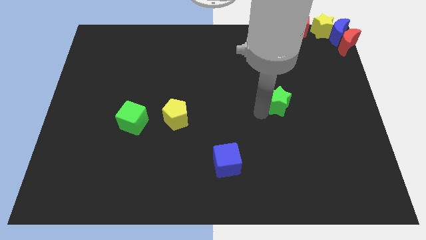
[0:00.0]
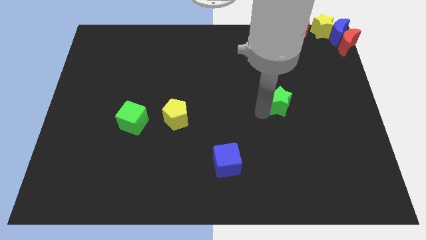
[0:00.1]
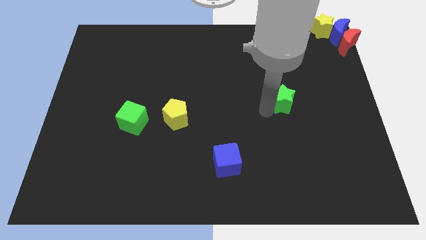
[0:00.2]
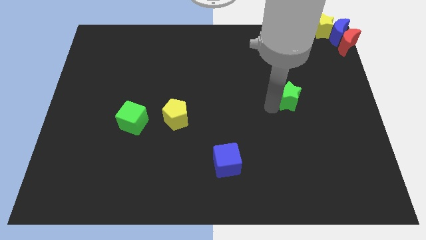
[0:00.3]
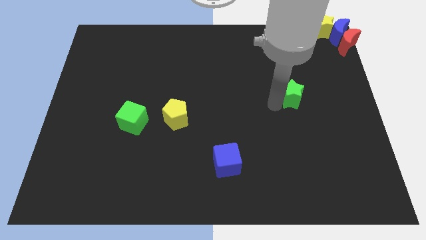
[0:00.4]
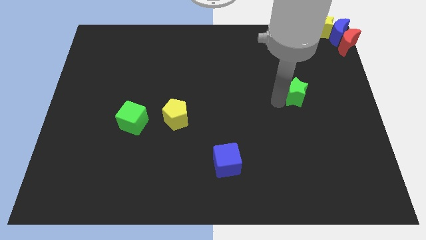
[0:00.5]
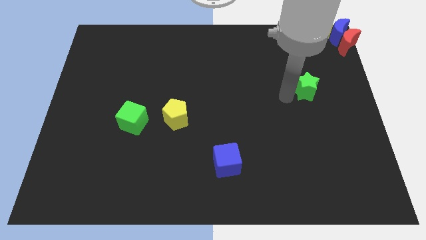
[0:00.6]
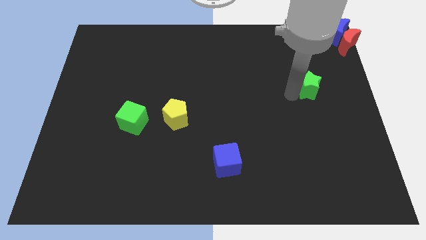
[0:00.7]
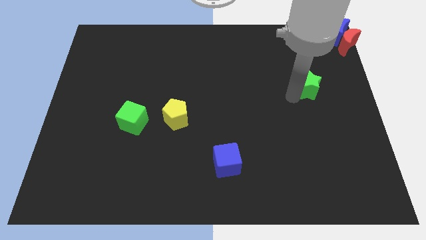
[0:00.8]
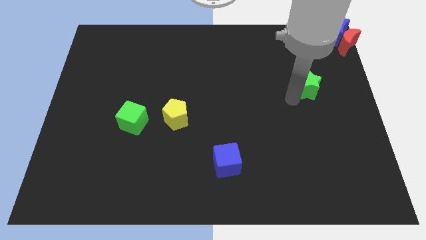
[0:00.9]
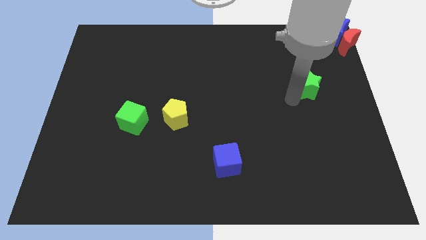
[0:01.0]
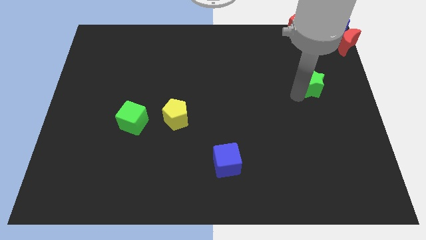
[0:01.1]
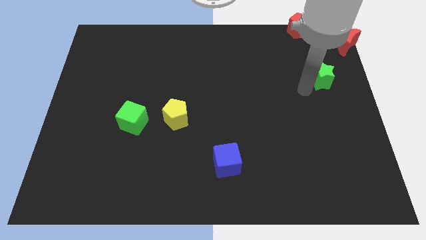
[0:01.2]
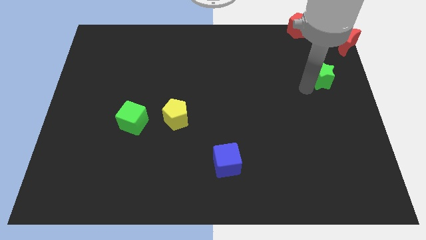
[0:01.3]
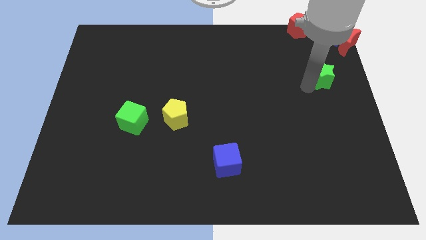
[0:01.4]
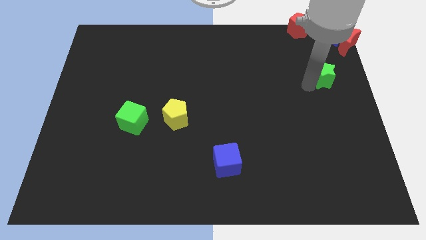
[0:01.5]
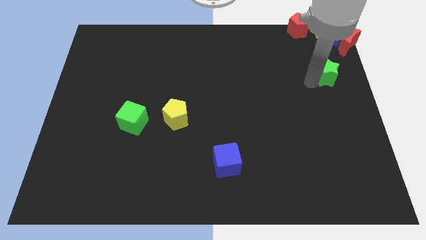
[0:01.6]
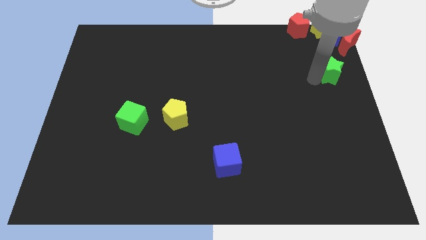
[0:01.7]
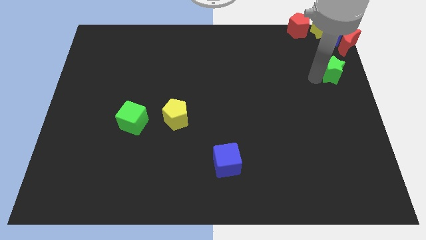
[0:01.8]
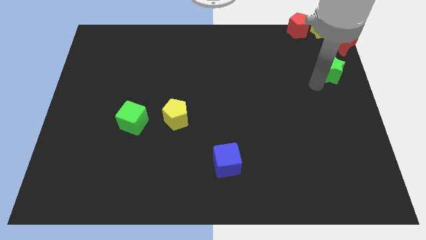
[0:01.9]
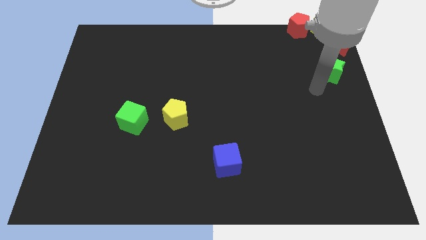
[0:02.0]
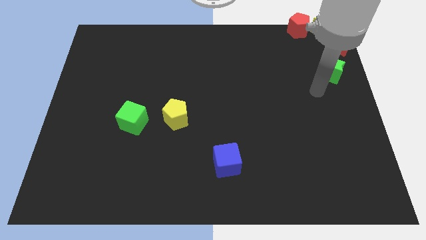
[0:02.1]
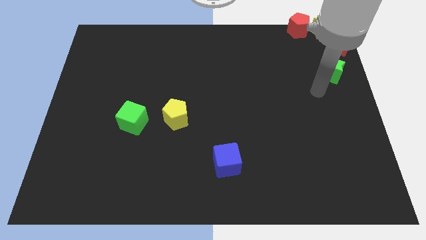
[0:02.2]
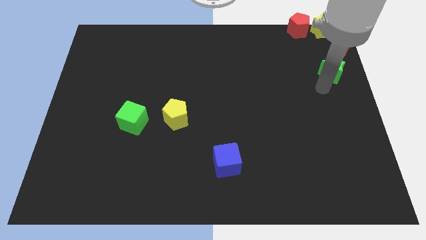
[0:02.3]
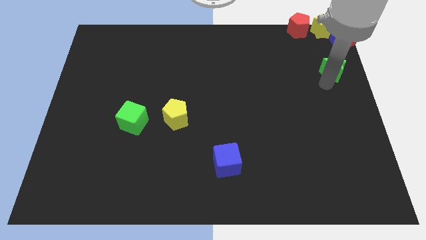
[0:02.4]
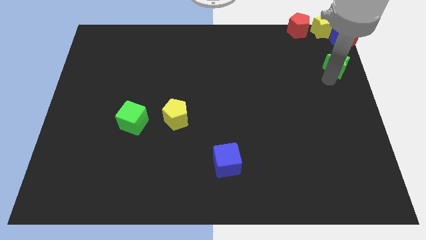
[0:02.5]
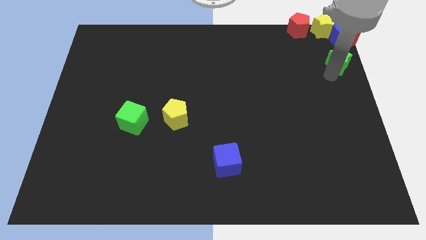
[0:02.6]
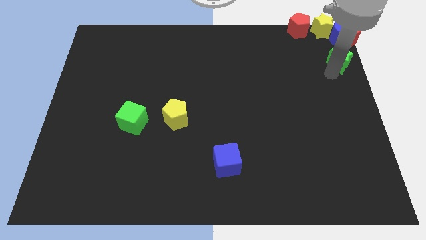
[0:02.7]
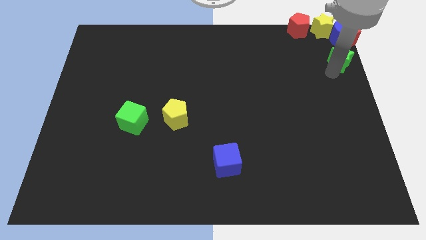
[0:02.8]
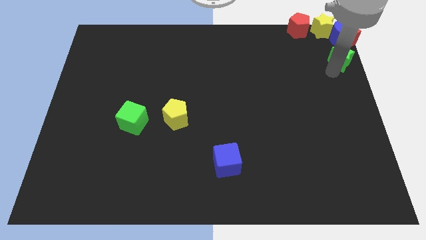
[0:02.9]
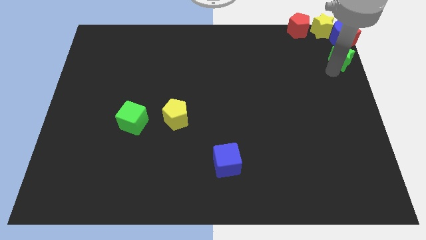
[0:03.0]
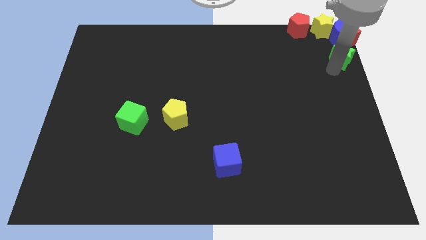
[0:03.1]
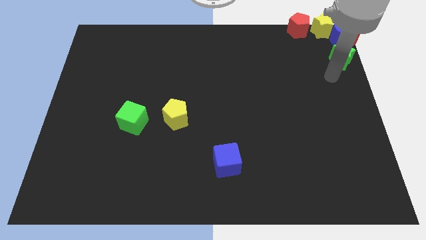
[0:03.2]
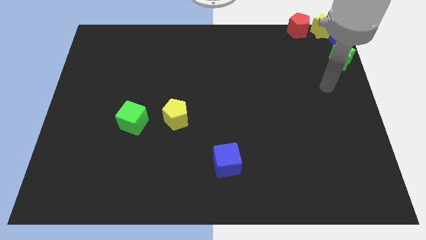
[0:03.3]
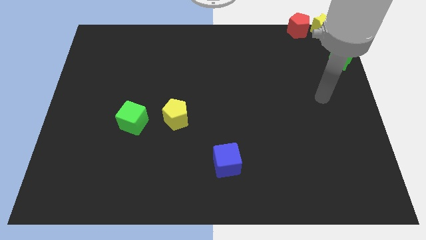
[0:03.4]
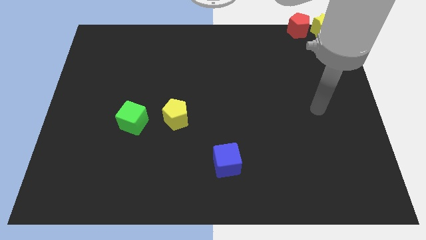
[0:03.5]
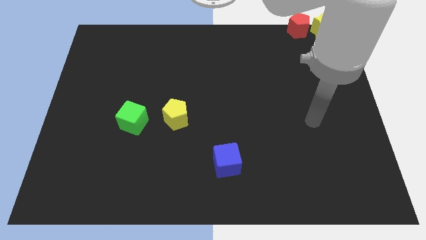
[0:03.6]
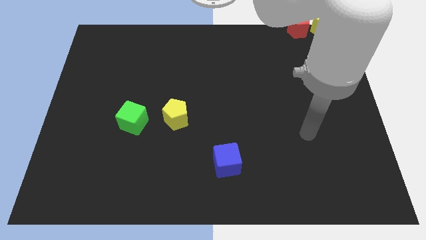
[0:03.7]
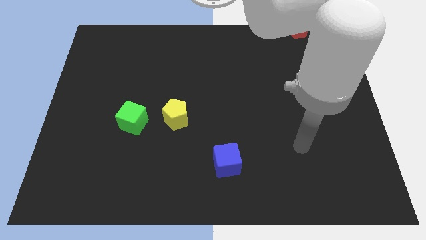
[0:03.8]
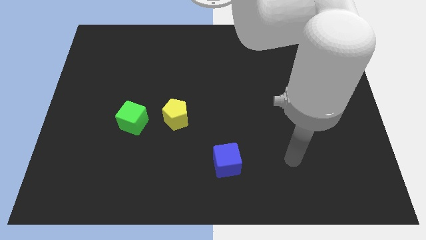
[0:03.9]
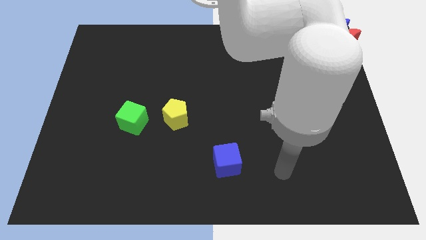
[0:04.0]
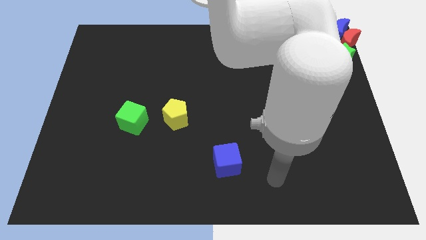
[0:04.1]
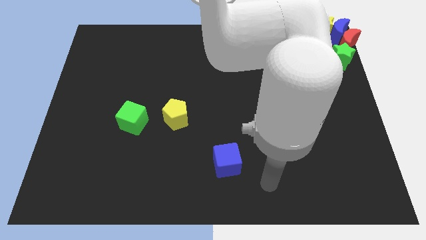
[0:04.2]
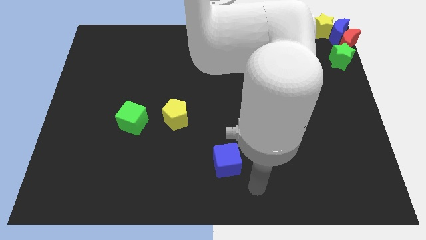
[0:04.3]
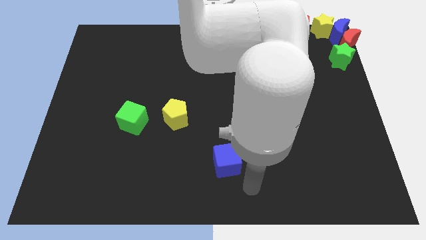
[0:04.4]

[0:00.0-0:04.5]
push the green star below the red moon

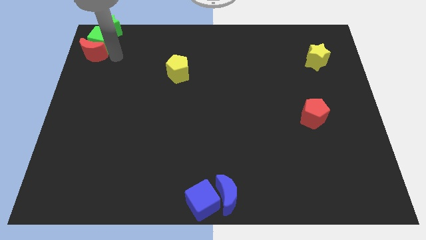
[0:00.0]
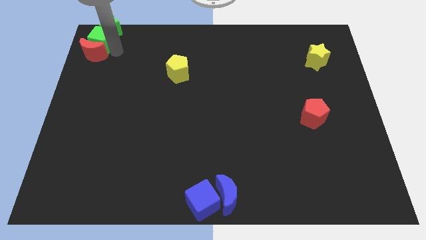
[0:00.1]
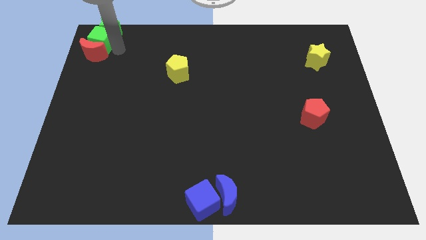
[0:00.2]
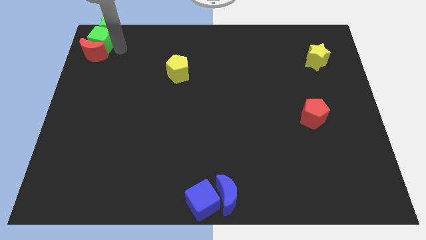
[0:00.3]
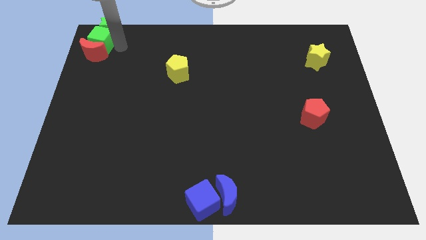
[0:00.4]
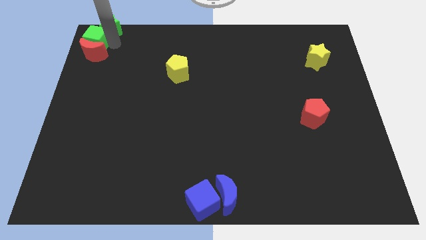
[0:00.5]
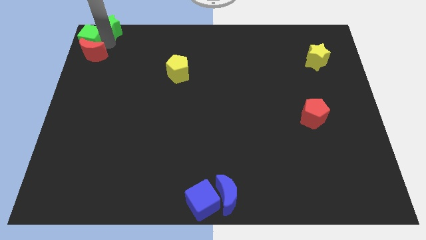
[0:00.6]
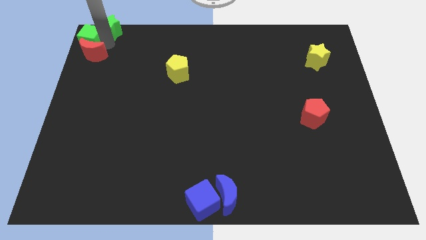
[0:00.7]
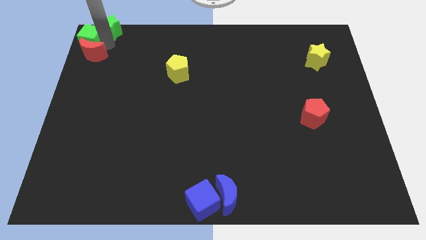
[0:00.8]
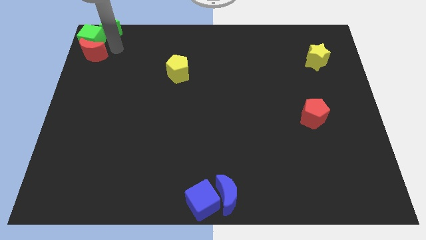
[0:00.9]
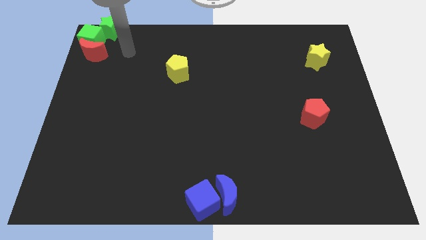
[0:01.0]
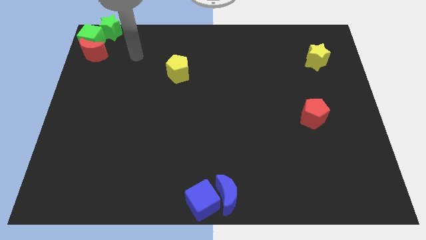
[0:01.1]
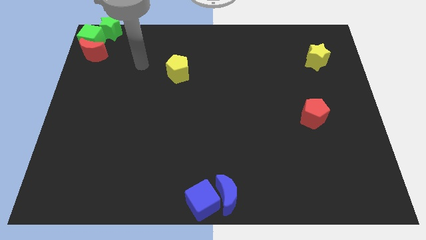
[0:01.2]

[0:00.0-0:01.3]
slightly separate the green cube from green star and red moon

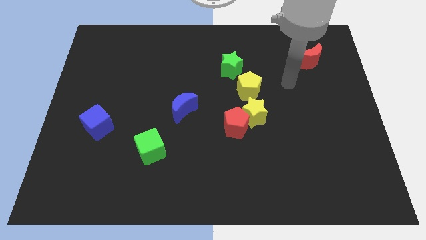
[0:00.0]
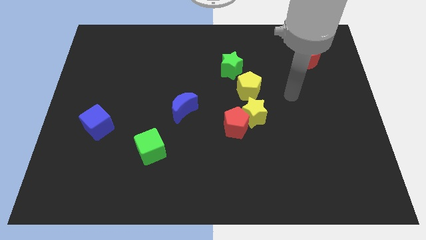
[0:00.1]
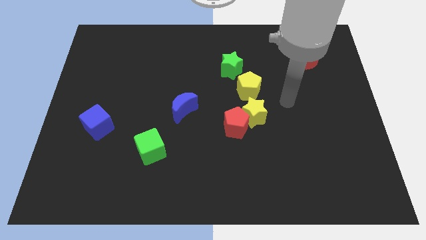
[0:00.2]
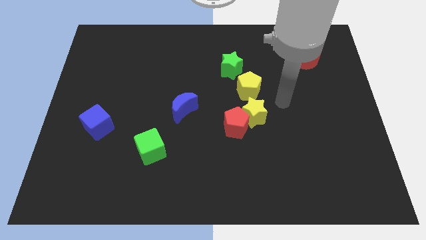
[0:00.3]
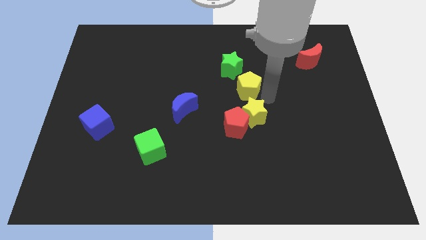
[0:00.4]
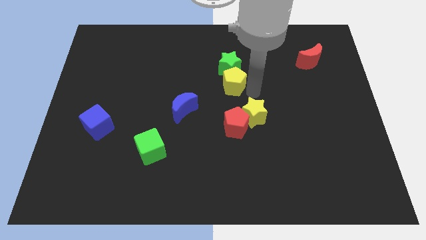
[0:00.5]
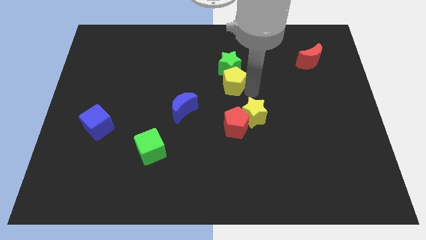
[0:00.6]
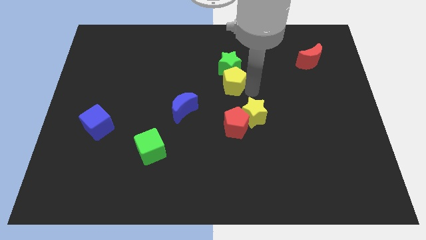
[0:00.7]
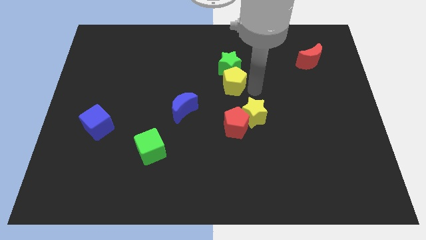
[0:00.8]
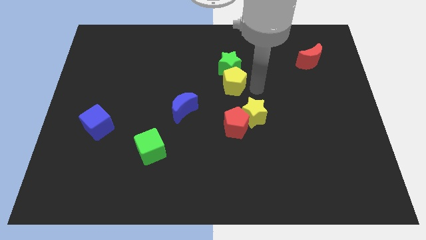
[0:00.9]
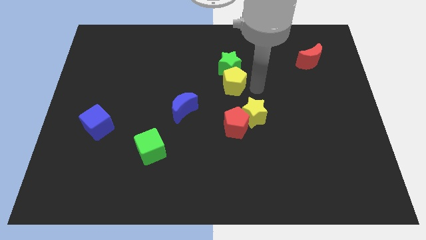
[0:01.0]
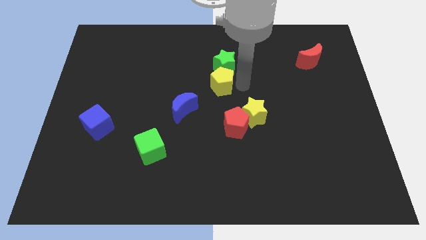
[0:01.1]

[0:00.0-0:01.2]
push the yellow pentagon into the green star

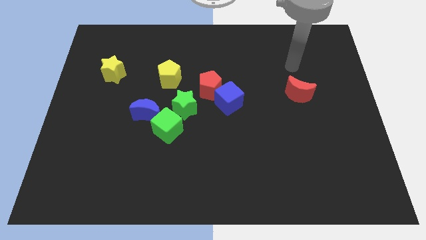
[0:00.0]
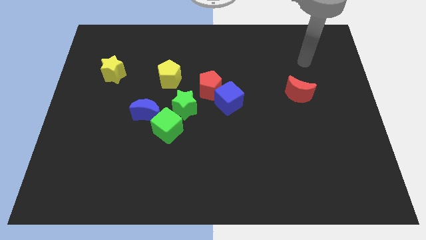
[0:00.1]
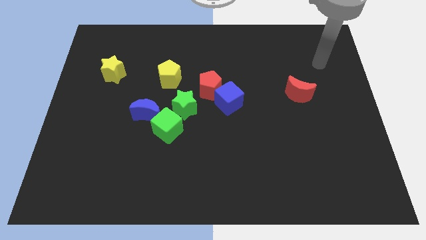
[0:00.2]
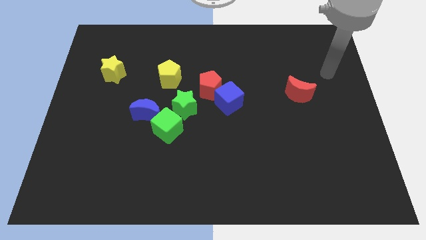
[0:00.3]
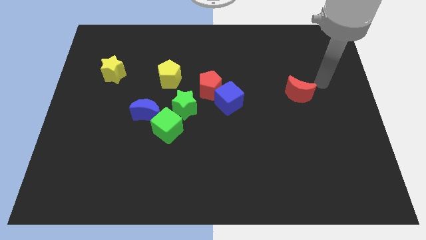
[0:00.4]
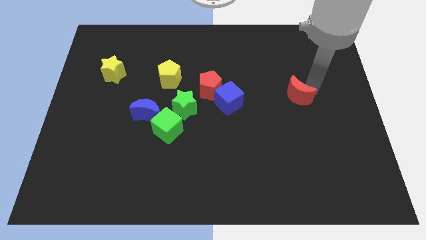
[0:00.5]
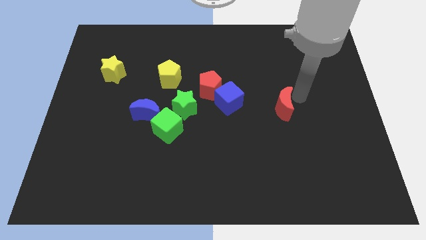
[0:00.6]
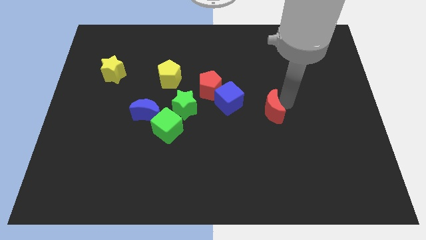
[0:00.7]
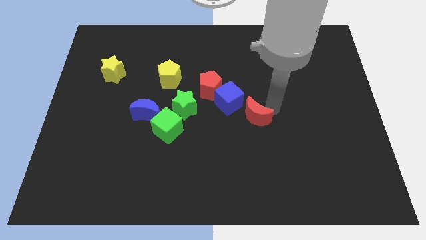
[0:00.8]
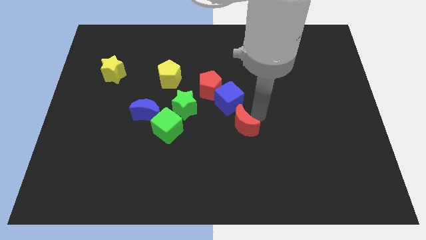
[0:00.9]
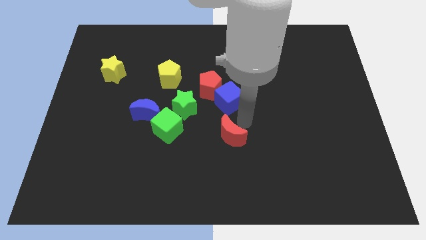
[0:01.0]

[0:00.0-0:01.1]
move the red crescent to the bottom of the blue cube

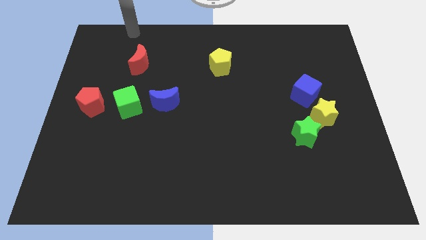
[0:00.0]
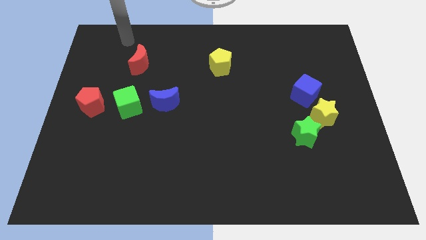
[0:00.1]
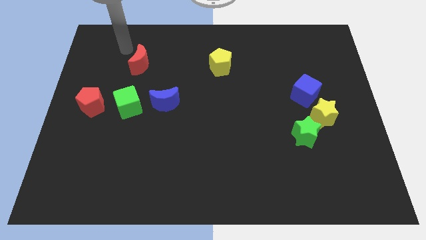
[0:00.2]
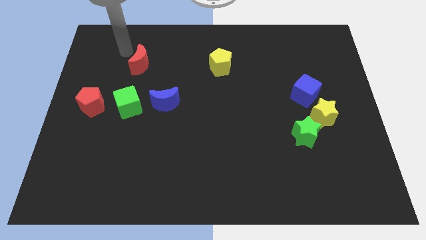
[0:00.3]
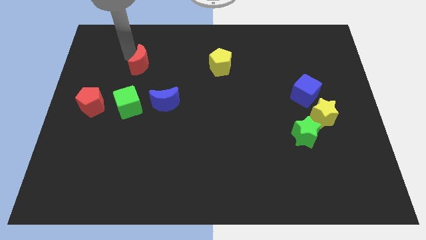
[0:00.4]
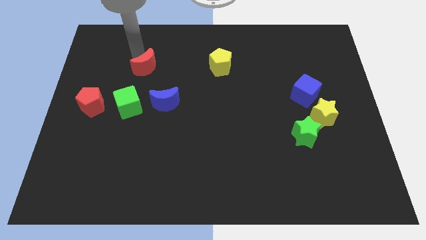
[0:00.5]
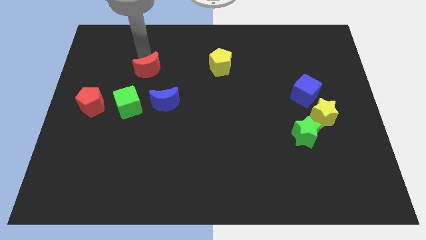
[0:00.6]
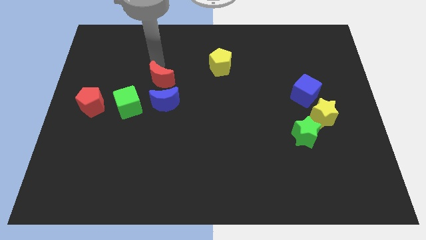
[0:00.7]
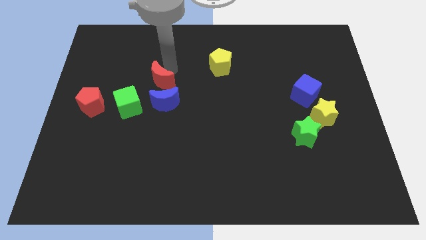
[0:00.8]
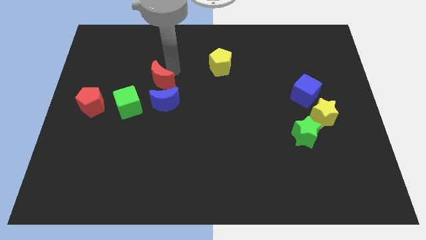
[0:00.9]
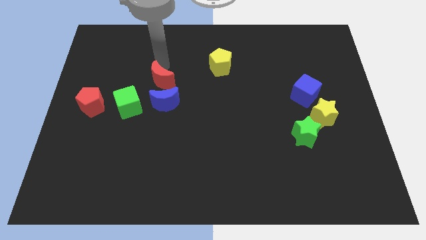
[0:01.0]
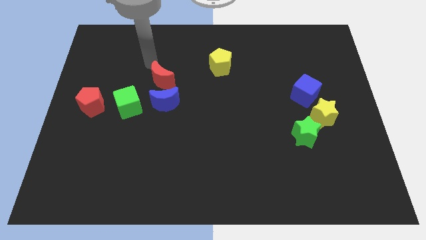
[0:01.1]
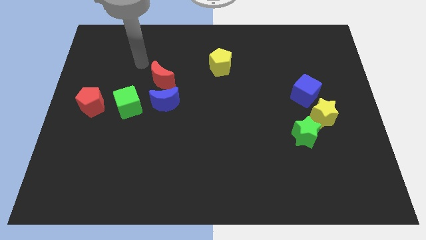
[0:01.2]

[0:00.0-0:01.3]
move the red crescent to the top of blue crescent
